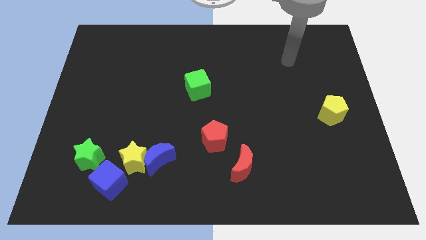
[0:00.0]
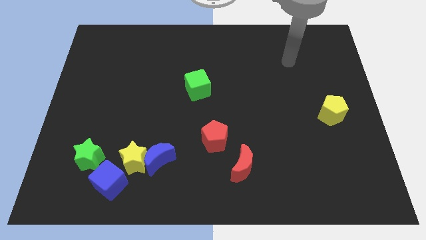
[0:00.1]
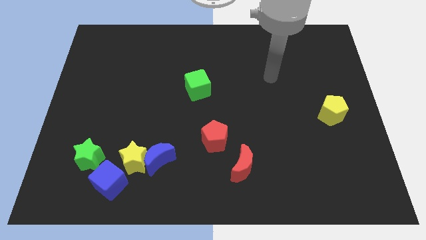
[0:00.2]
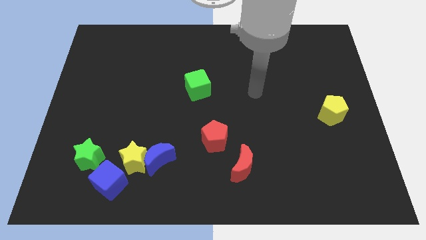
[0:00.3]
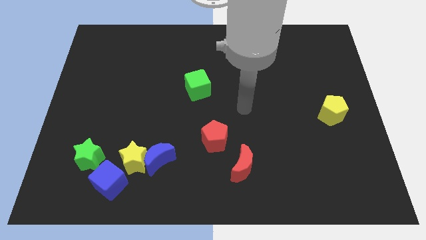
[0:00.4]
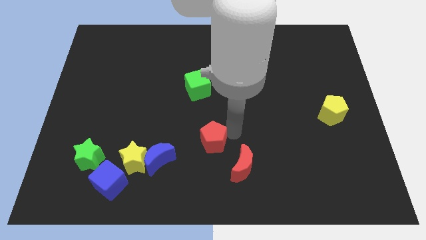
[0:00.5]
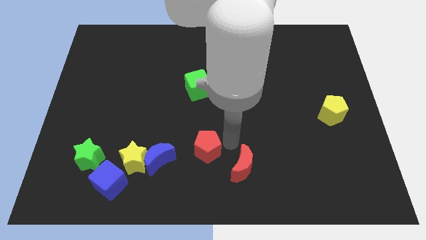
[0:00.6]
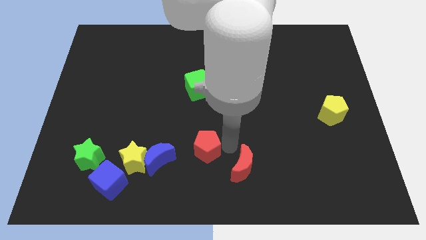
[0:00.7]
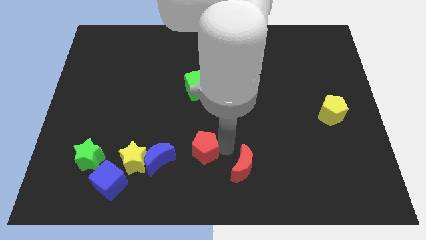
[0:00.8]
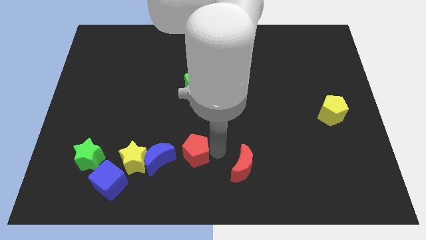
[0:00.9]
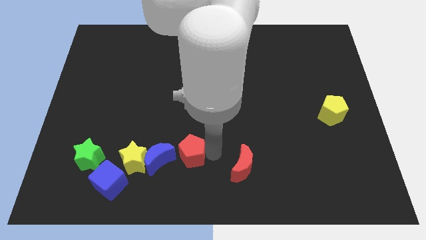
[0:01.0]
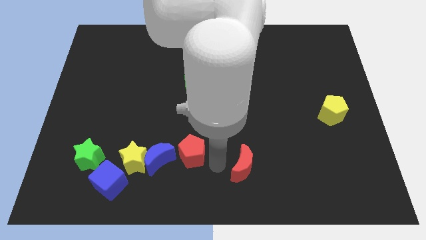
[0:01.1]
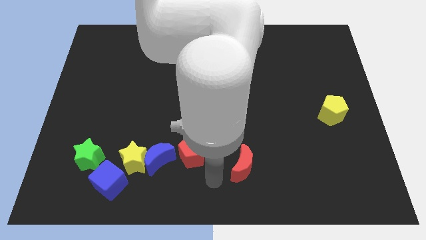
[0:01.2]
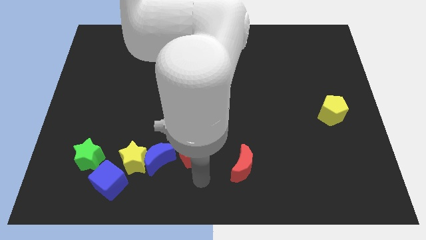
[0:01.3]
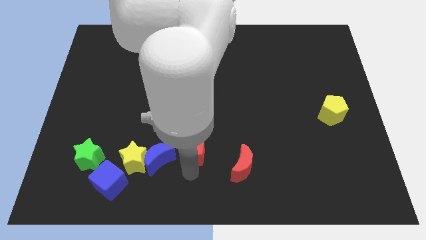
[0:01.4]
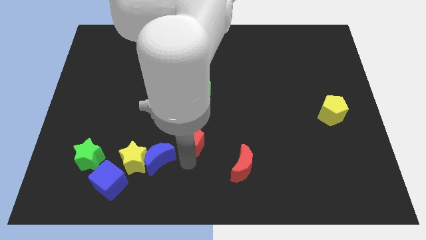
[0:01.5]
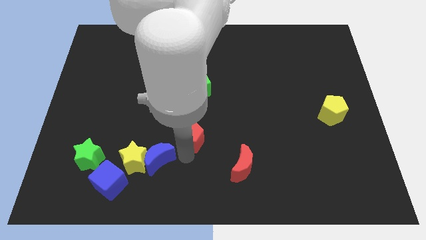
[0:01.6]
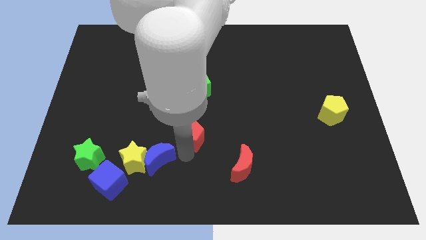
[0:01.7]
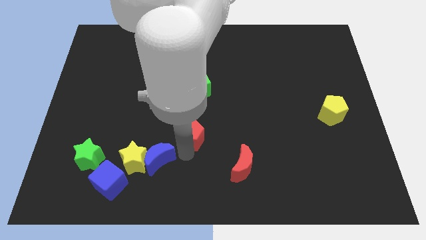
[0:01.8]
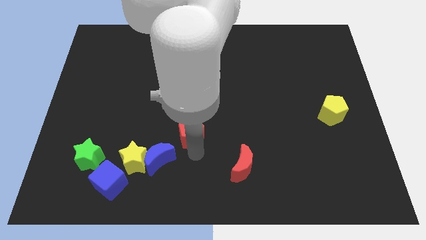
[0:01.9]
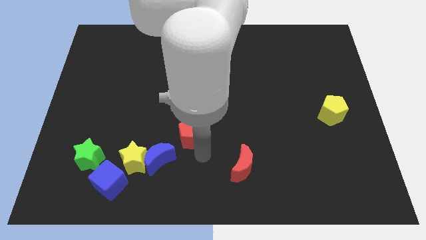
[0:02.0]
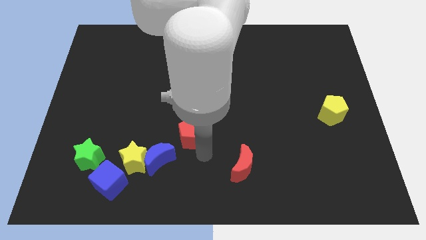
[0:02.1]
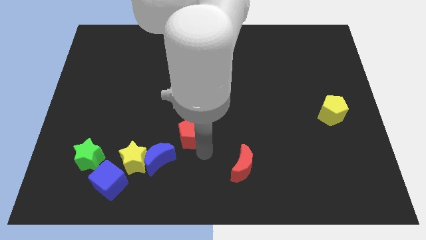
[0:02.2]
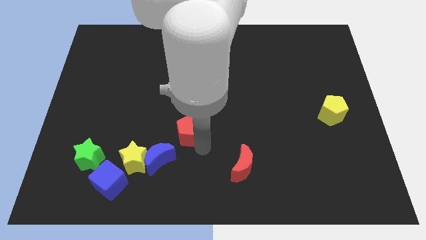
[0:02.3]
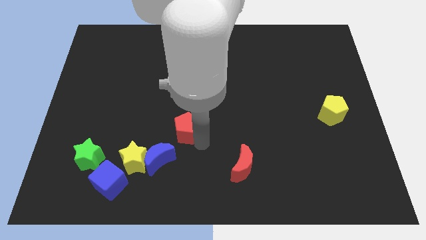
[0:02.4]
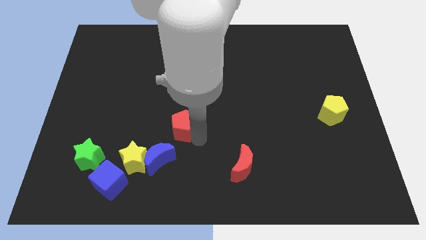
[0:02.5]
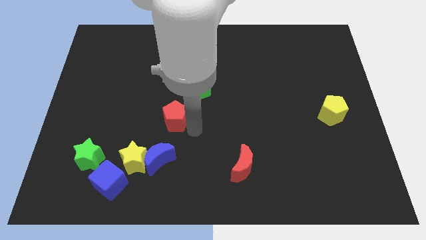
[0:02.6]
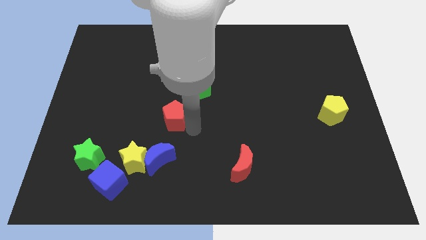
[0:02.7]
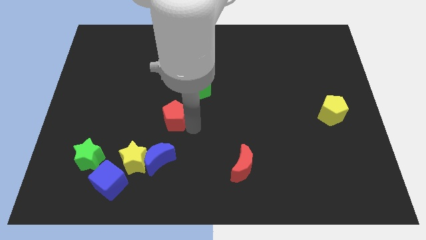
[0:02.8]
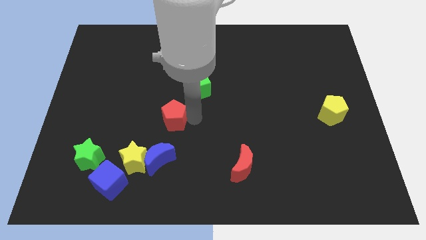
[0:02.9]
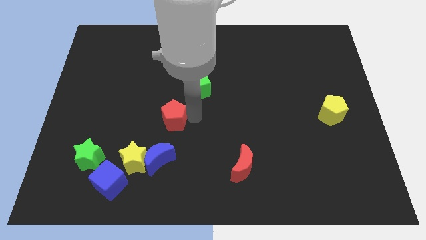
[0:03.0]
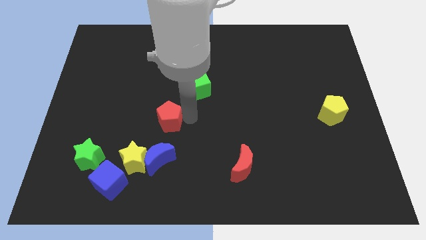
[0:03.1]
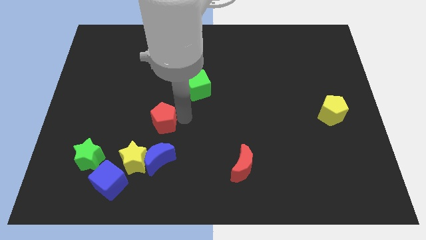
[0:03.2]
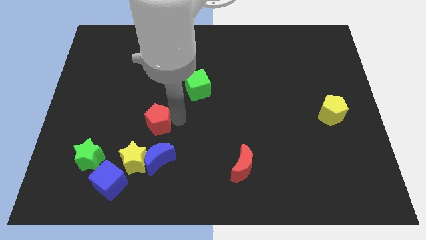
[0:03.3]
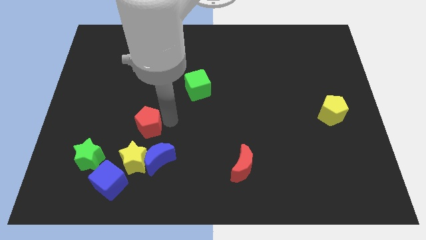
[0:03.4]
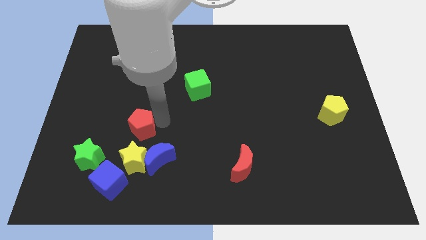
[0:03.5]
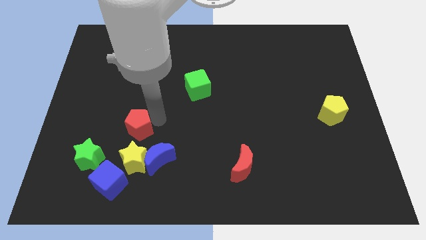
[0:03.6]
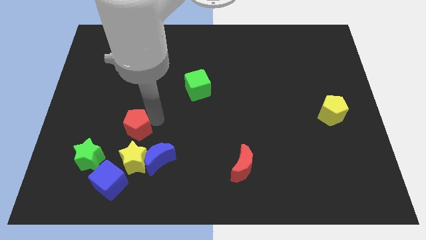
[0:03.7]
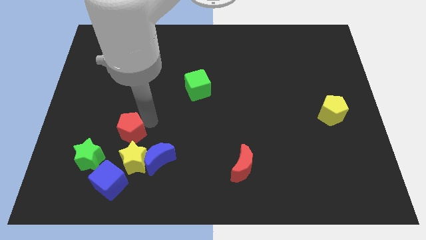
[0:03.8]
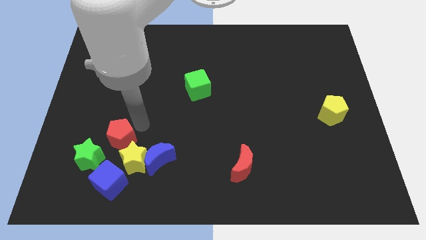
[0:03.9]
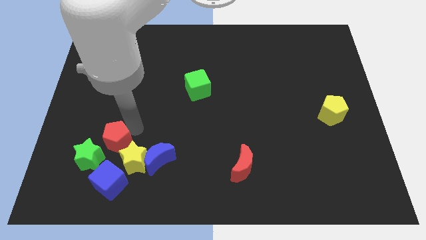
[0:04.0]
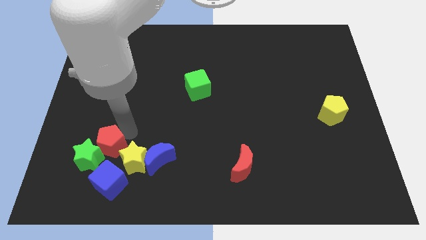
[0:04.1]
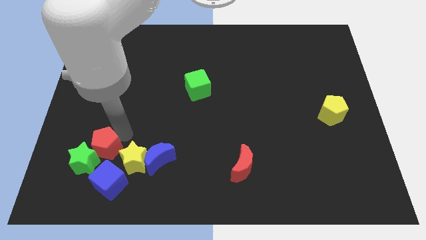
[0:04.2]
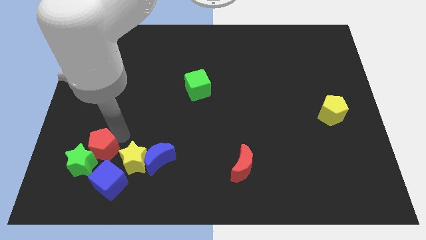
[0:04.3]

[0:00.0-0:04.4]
push the red pentagon to the green star

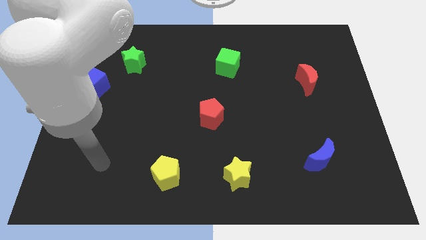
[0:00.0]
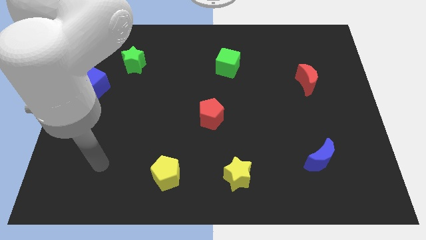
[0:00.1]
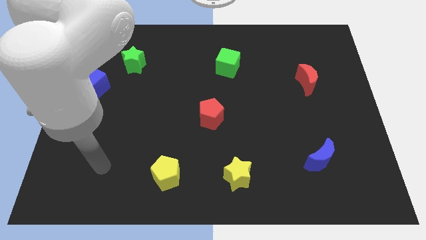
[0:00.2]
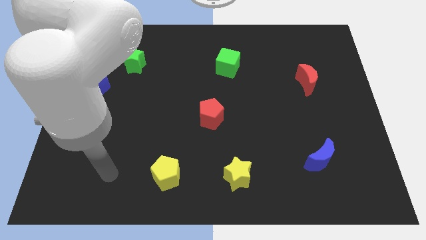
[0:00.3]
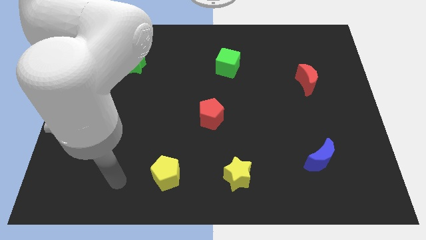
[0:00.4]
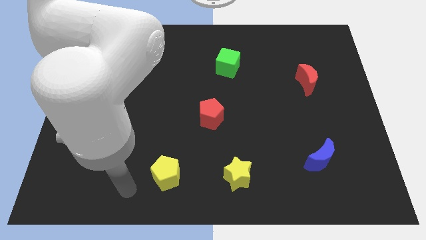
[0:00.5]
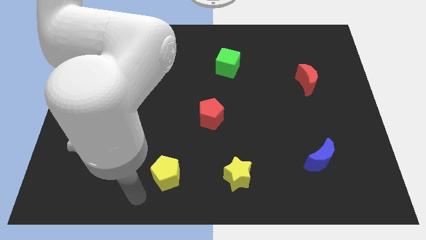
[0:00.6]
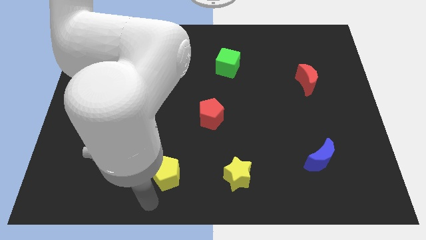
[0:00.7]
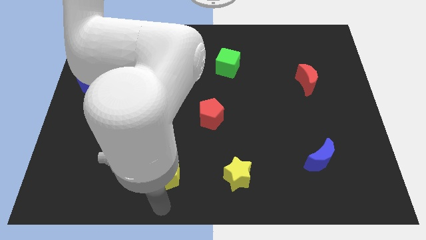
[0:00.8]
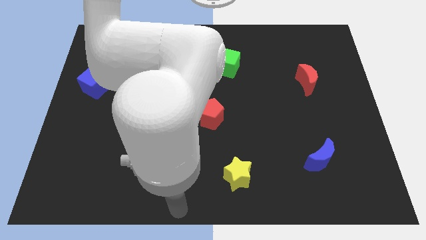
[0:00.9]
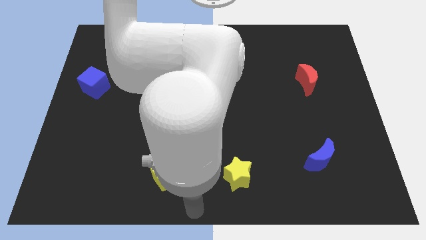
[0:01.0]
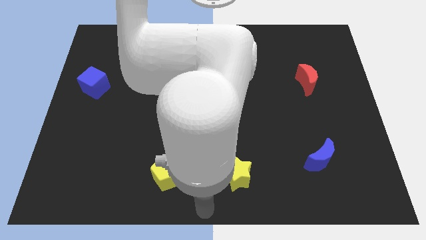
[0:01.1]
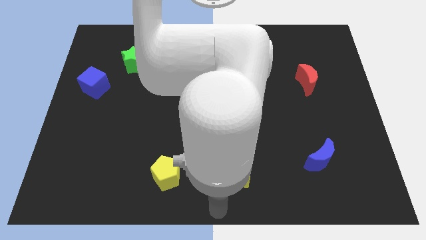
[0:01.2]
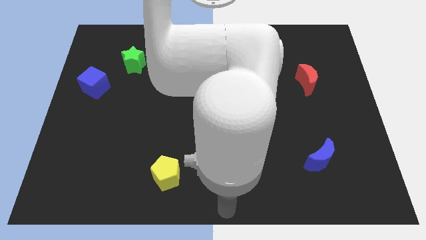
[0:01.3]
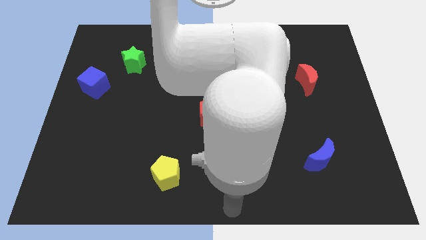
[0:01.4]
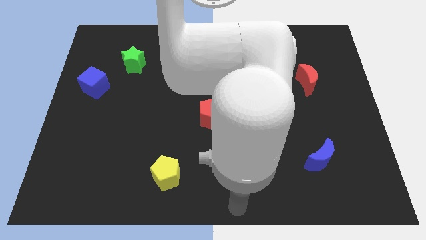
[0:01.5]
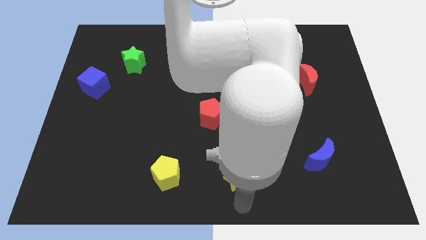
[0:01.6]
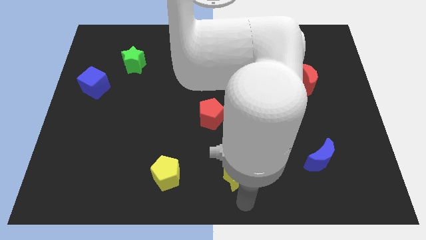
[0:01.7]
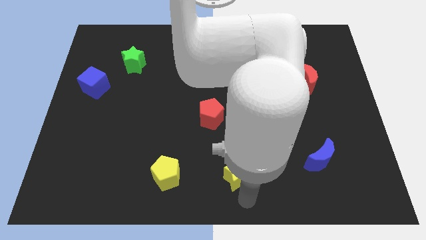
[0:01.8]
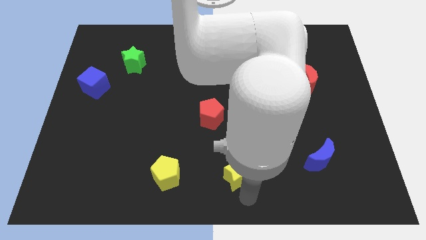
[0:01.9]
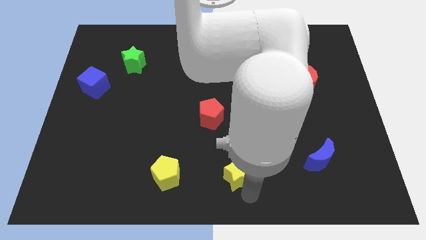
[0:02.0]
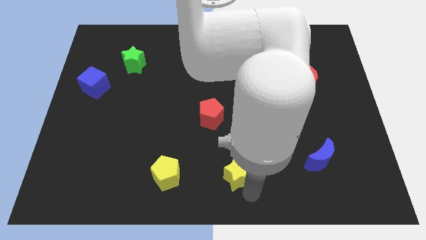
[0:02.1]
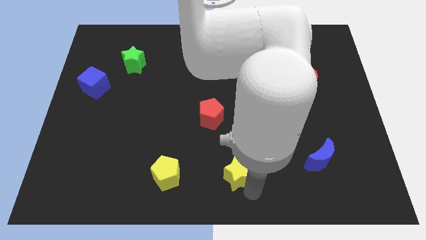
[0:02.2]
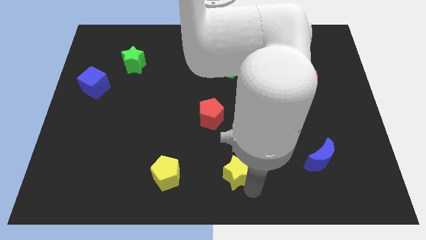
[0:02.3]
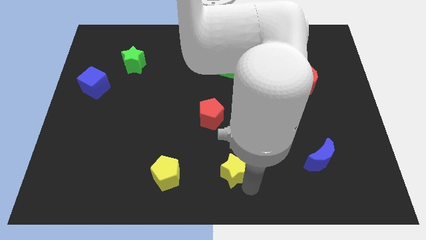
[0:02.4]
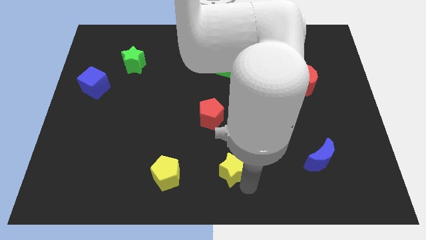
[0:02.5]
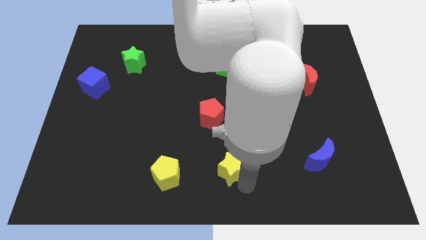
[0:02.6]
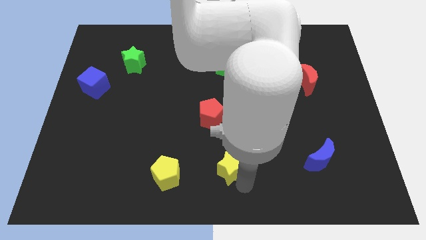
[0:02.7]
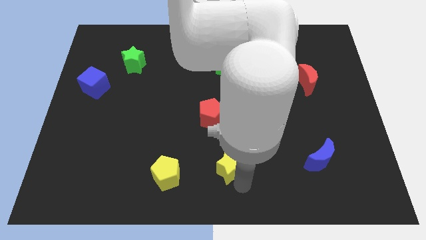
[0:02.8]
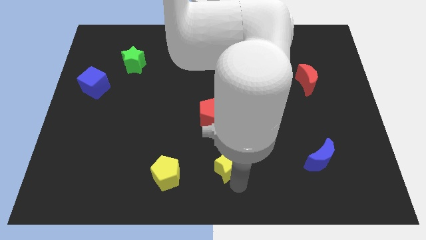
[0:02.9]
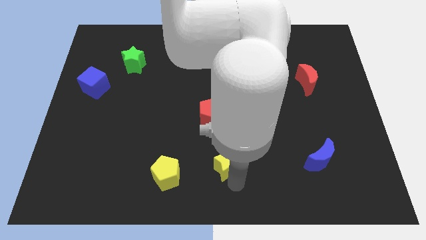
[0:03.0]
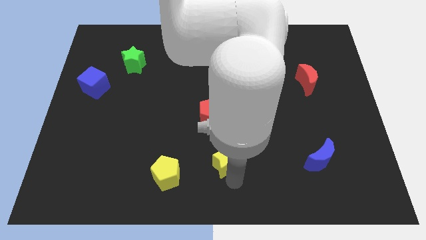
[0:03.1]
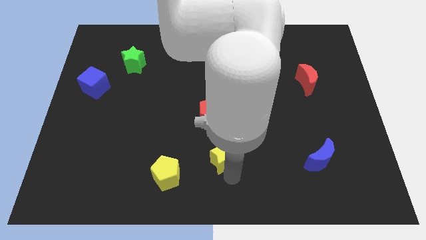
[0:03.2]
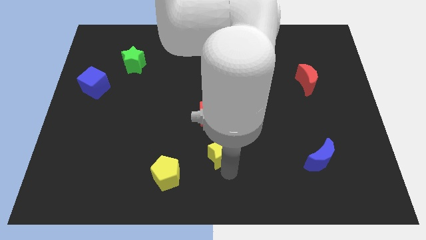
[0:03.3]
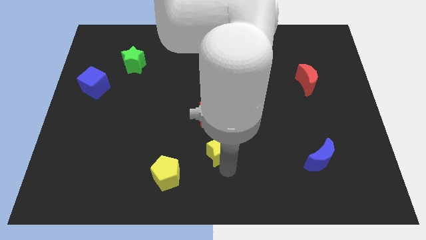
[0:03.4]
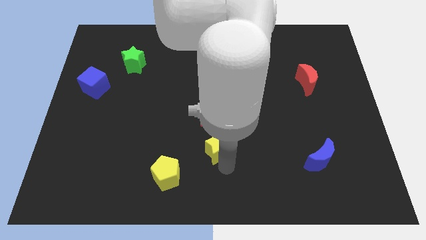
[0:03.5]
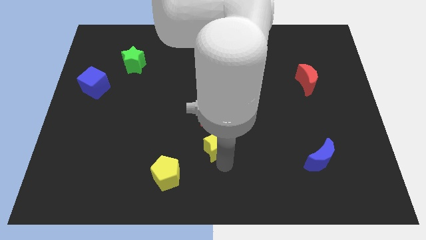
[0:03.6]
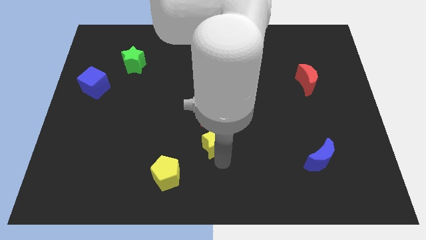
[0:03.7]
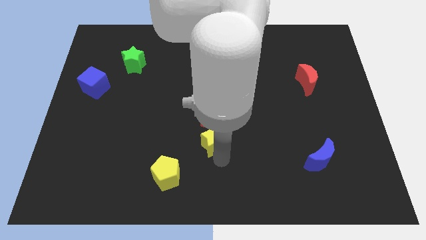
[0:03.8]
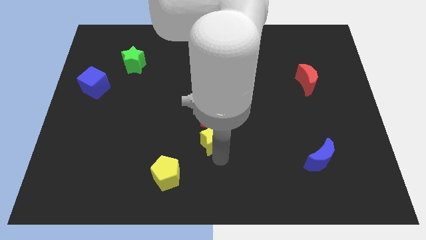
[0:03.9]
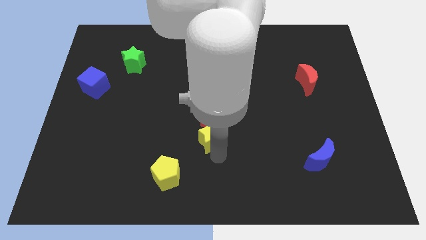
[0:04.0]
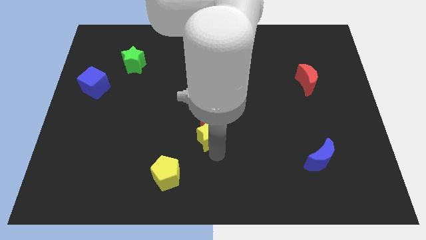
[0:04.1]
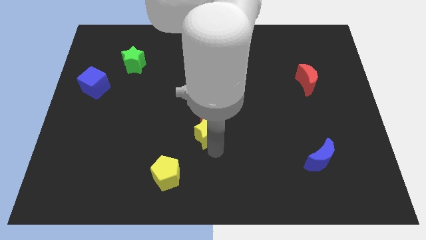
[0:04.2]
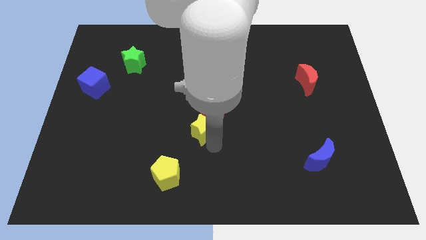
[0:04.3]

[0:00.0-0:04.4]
put the yellow star to the red pentagon
